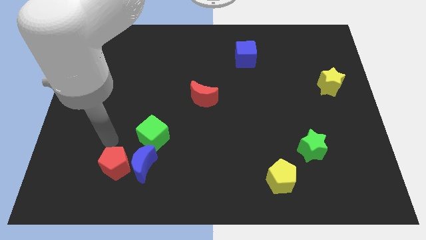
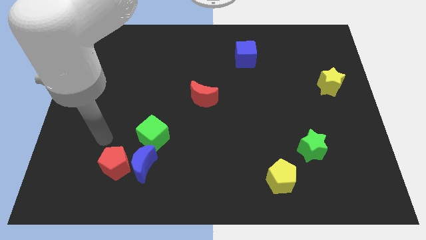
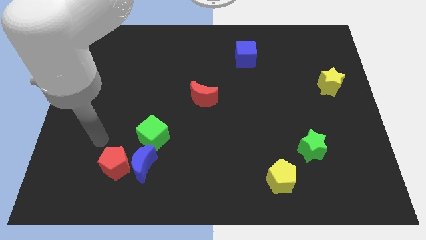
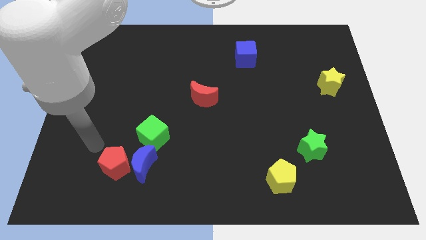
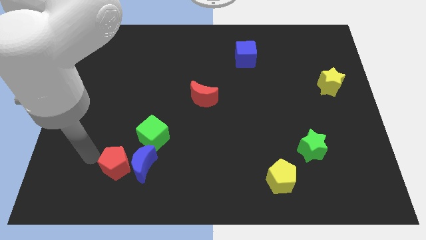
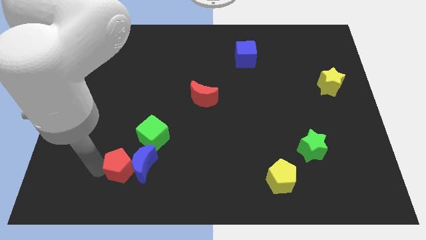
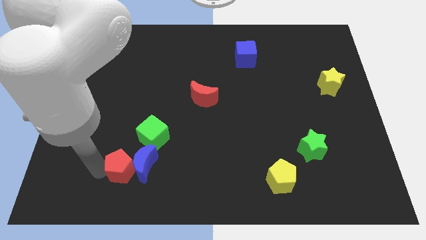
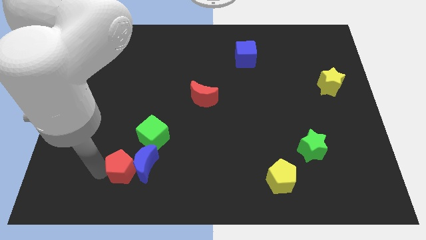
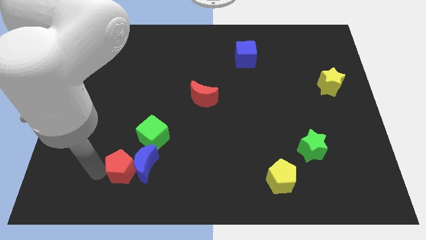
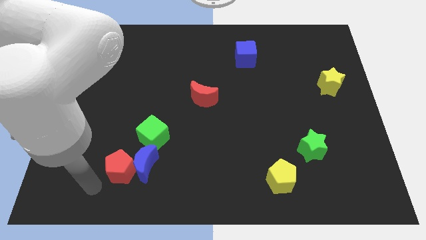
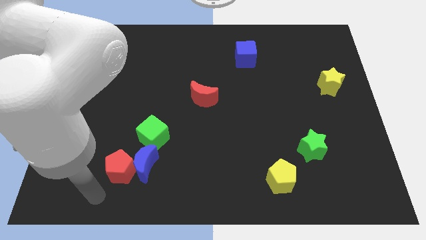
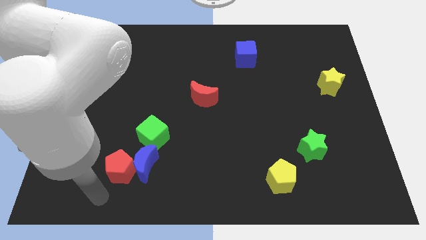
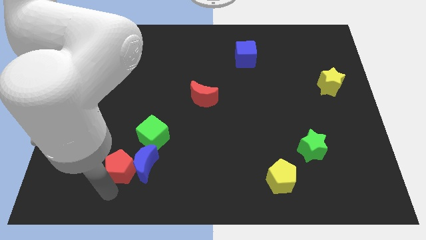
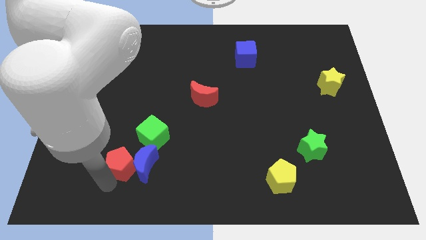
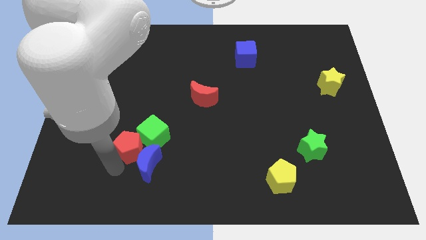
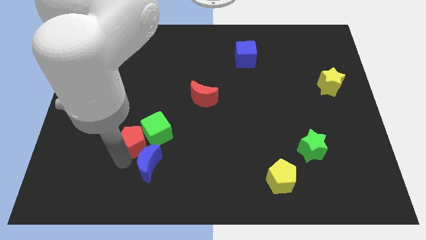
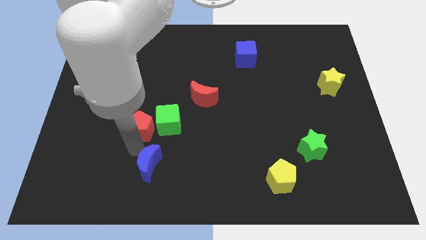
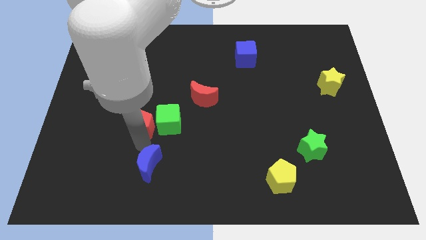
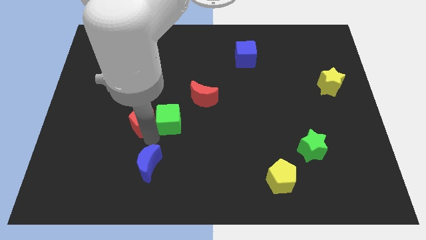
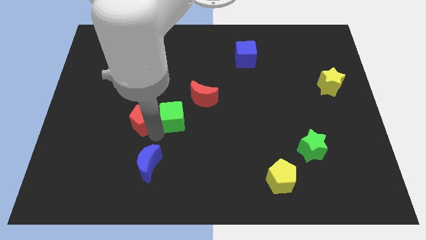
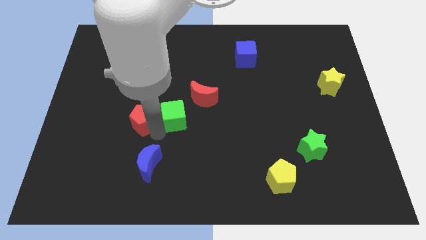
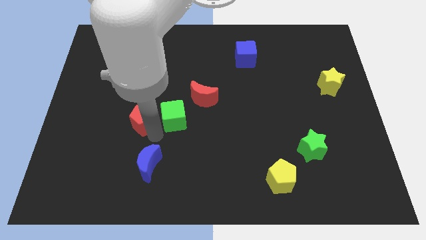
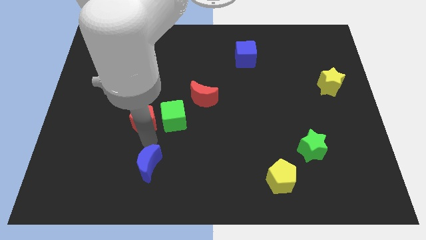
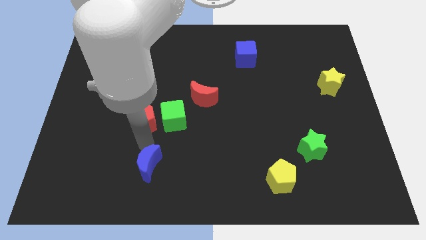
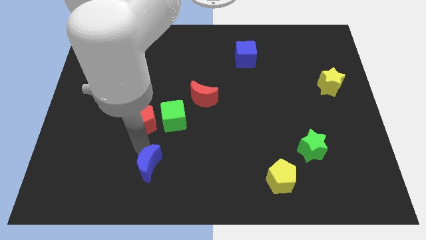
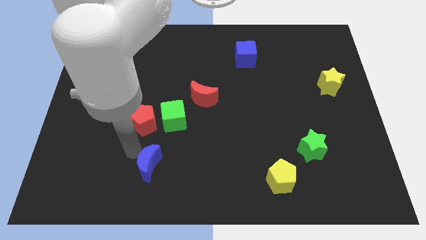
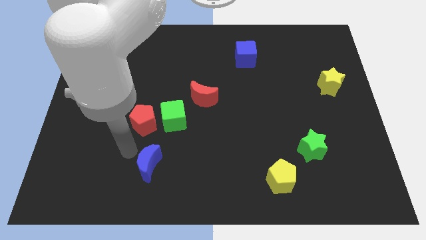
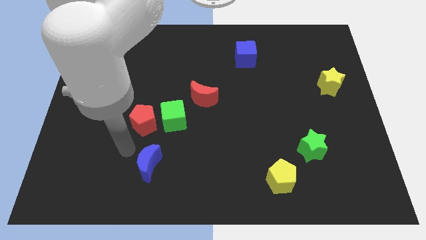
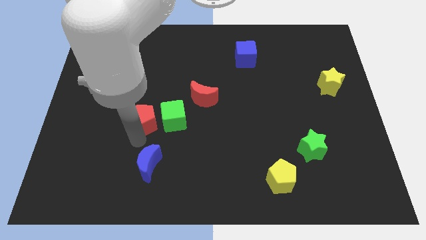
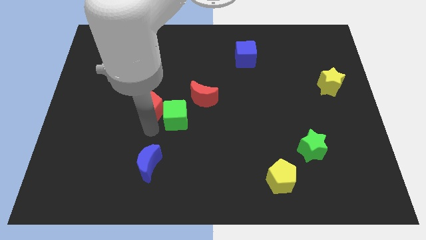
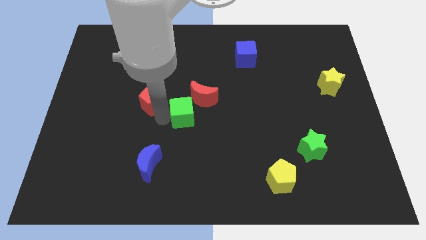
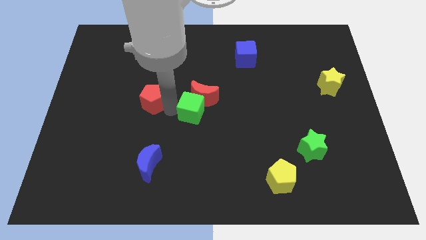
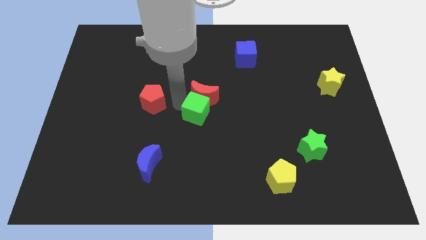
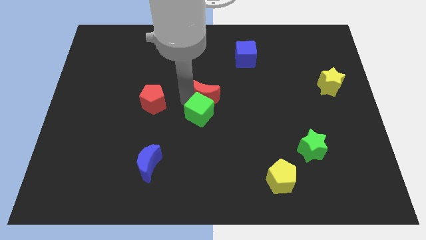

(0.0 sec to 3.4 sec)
slide green cube and red pentagon slightly to the red moon

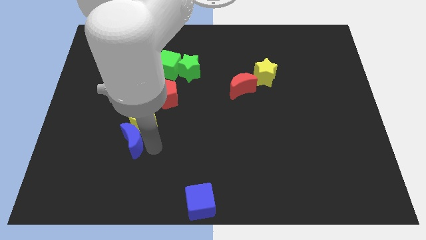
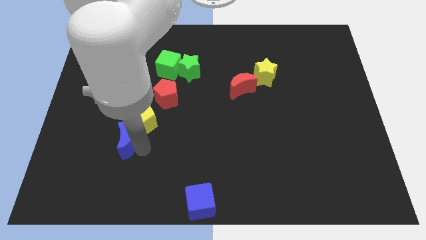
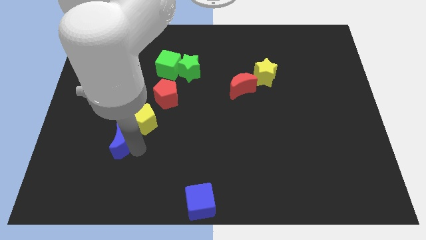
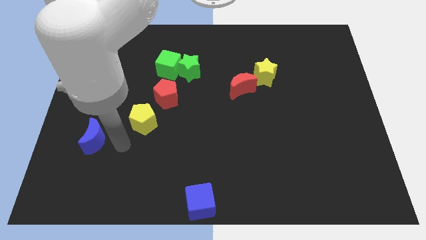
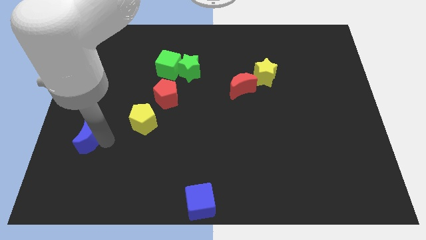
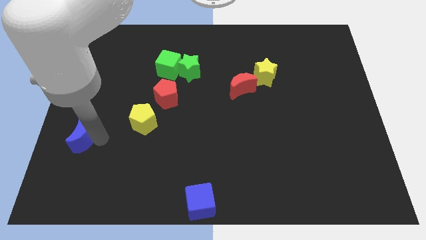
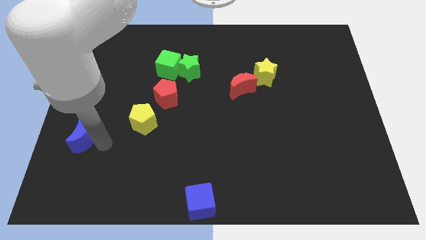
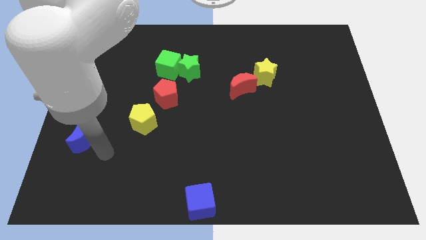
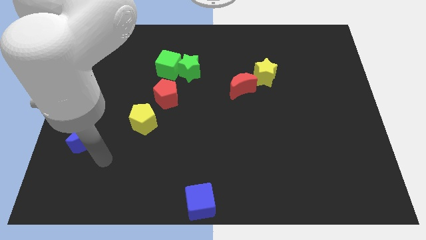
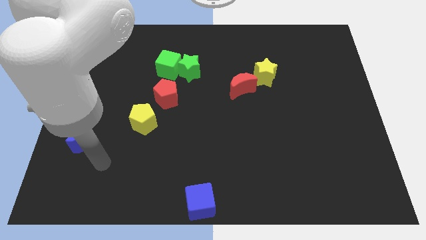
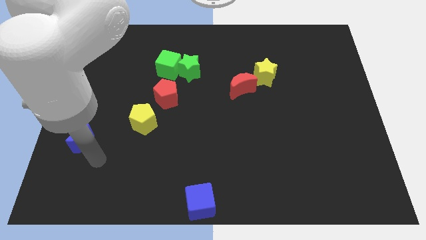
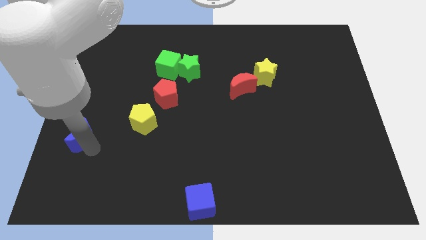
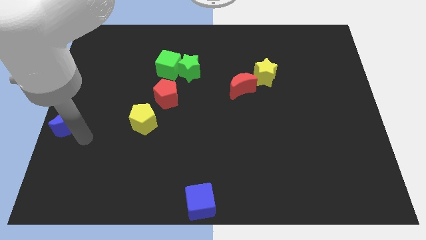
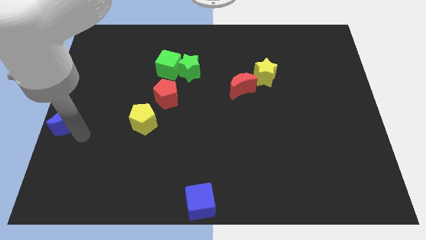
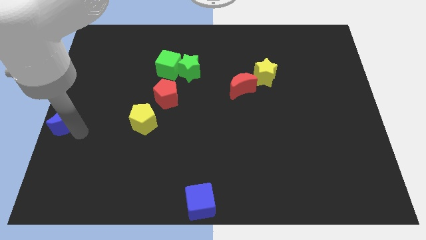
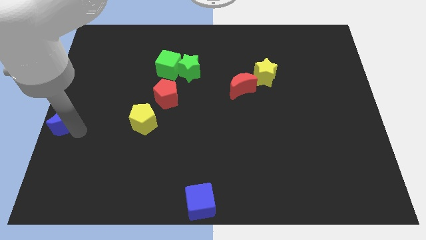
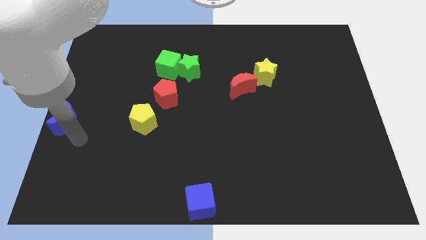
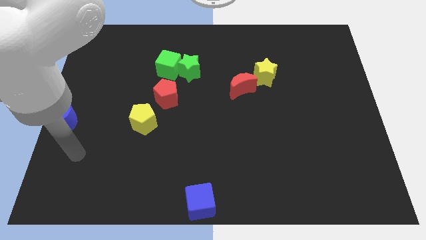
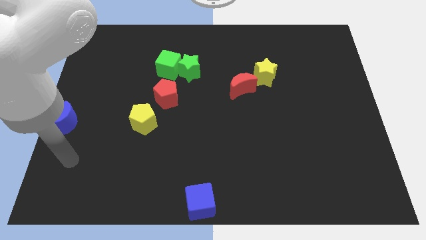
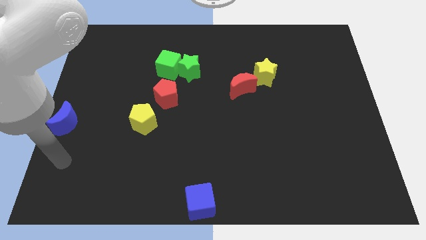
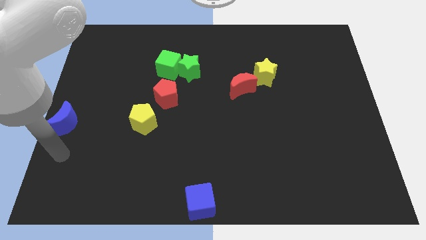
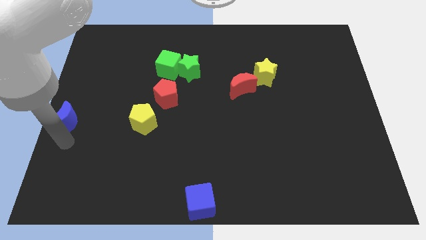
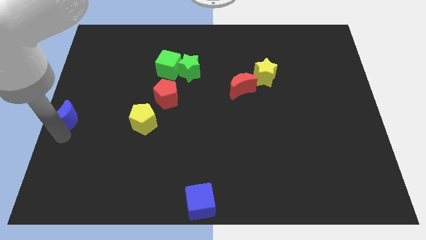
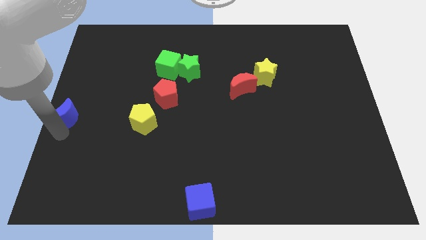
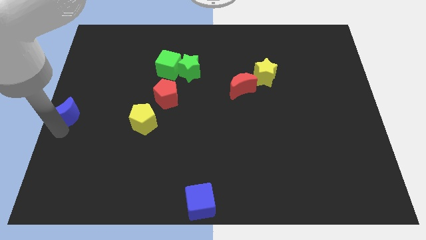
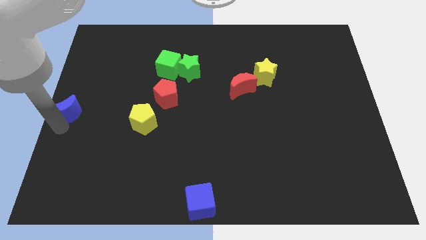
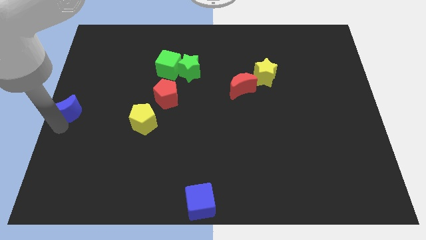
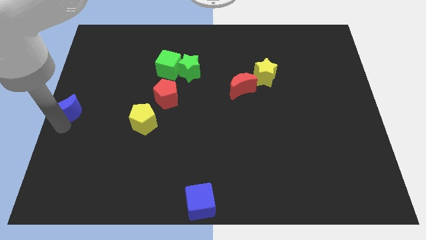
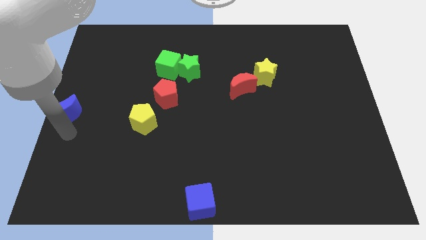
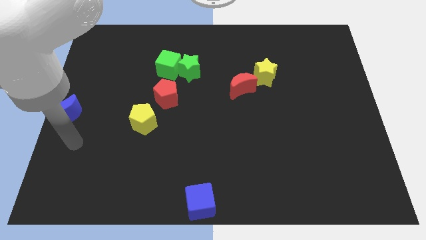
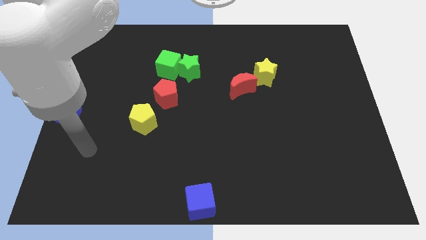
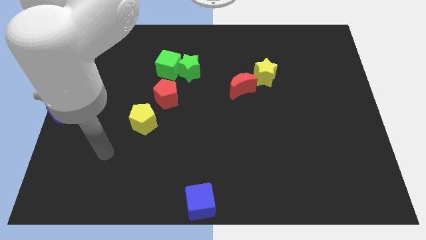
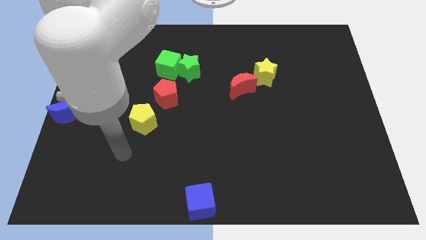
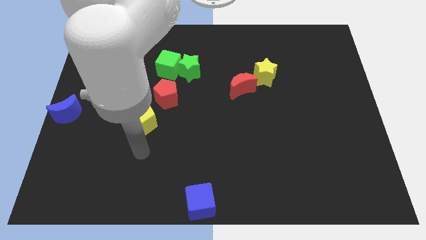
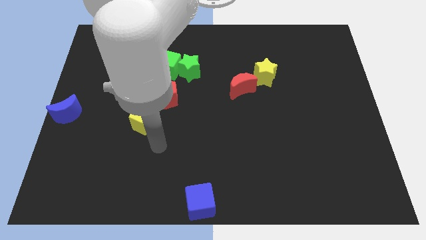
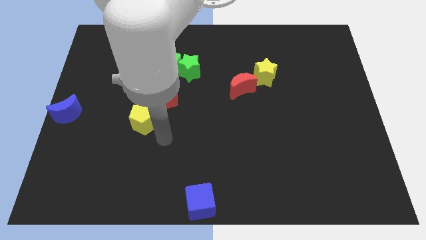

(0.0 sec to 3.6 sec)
push the blue crescent to the left center of the board

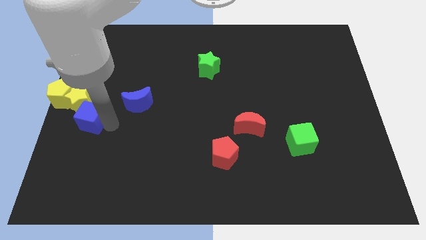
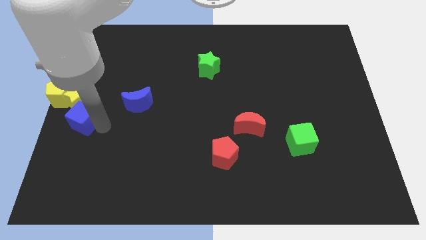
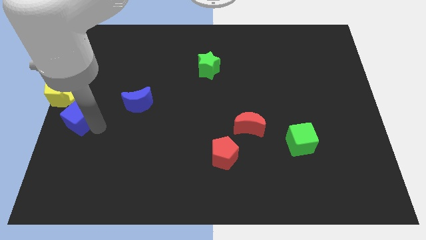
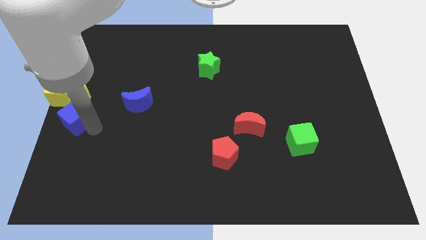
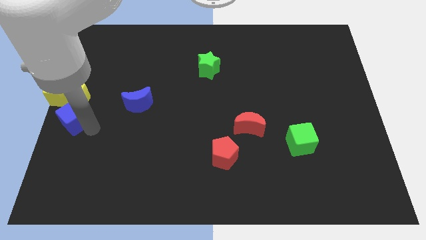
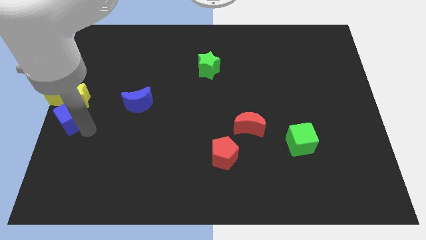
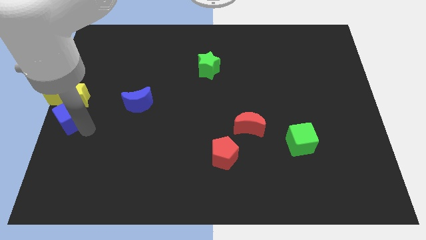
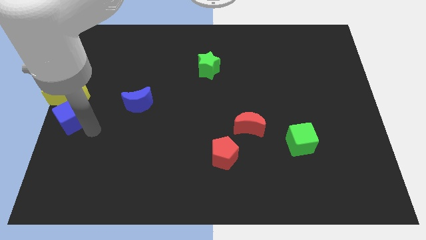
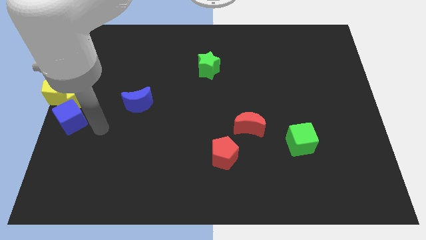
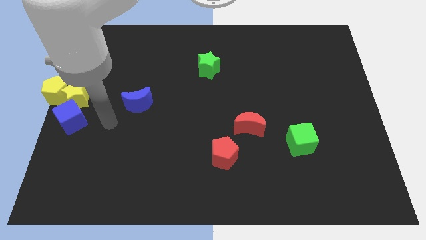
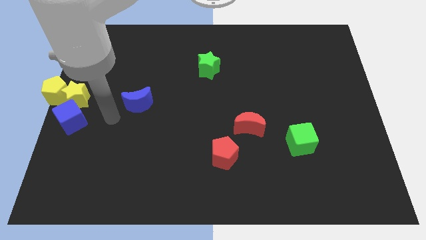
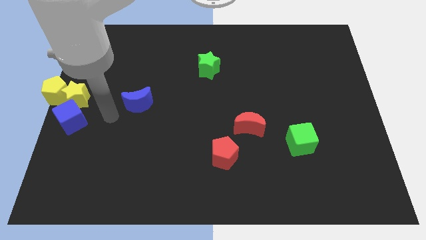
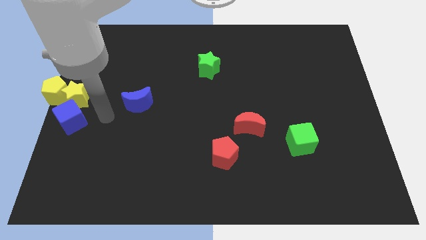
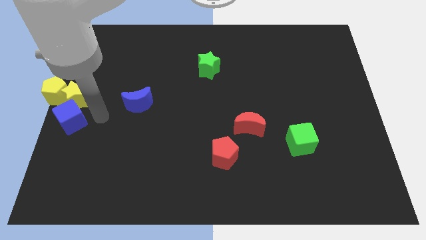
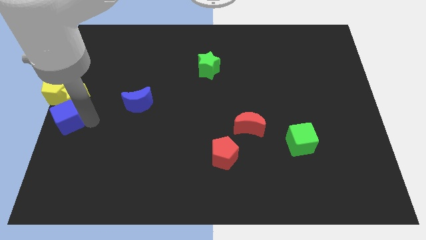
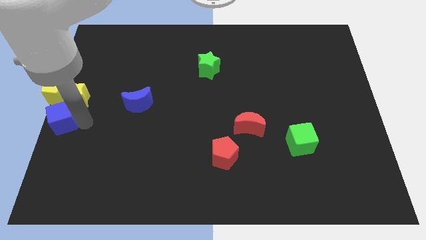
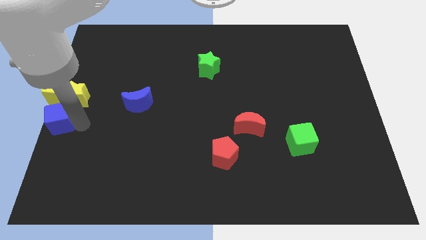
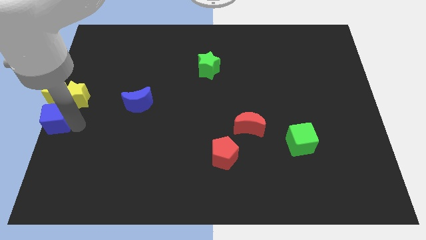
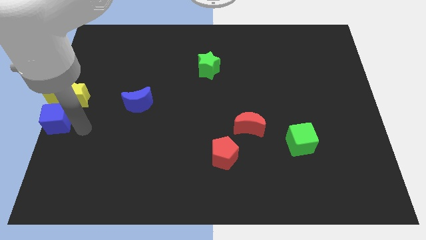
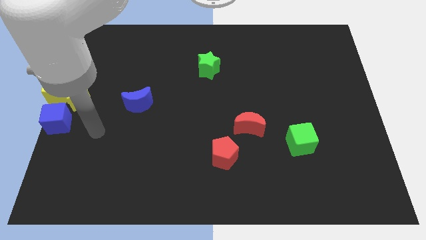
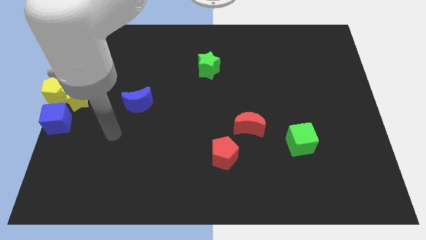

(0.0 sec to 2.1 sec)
push the blue cube to the bottom of the yellow pentagon
